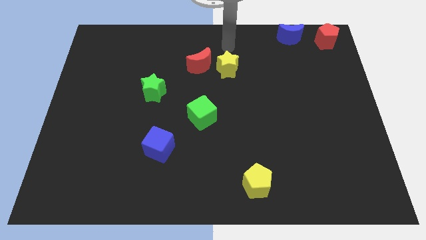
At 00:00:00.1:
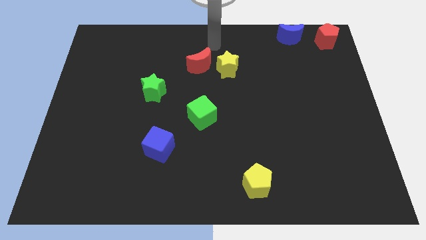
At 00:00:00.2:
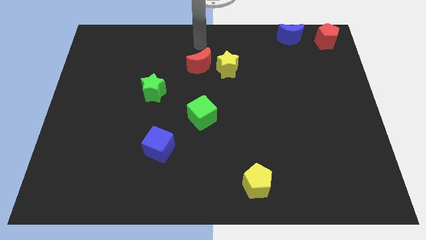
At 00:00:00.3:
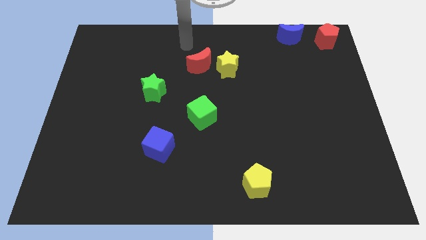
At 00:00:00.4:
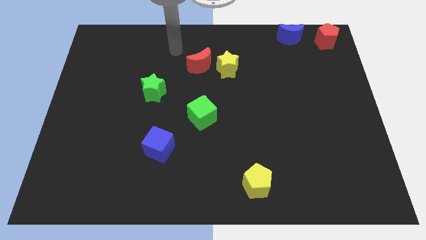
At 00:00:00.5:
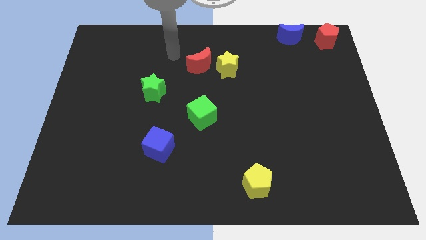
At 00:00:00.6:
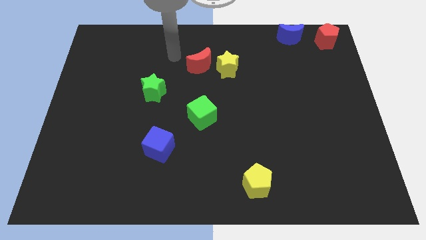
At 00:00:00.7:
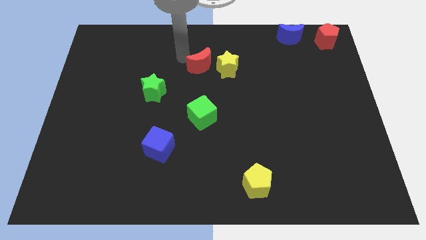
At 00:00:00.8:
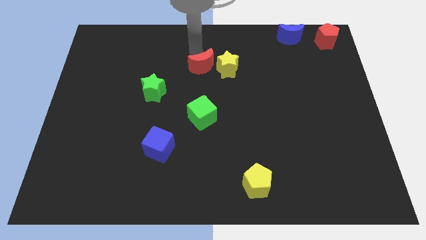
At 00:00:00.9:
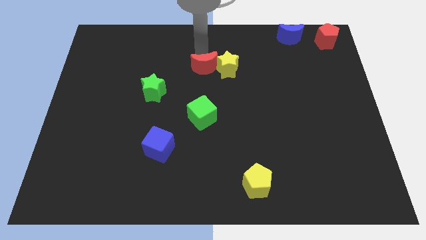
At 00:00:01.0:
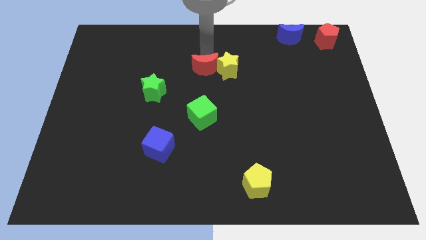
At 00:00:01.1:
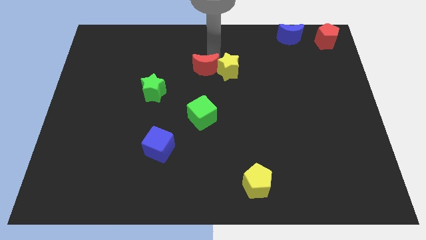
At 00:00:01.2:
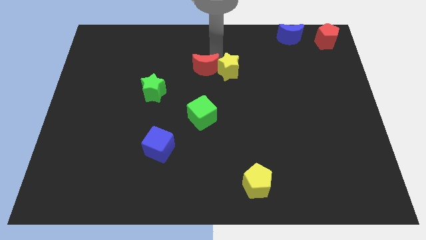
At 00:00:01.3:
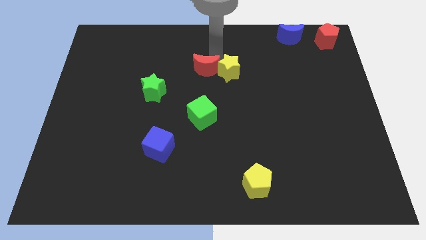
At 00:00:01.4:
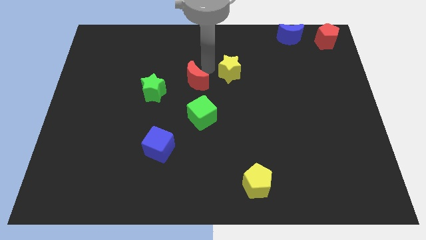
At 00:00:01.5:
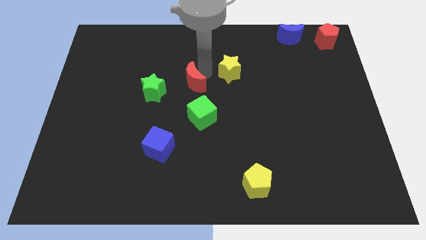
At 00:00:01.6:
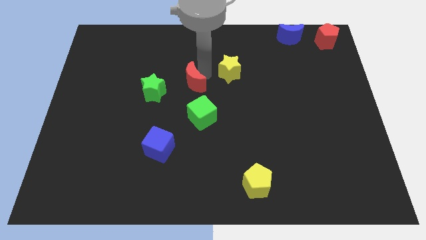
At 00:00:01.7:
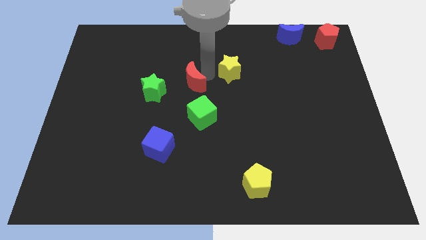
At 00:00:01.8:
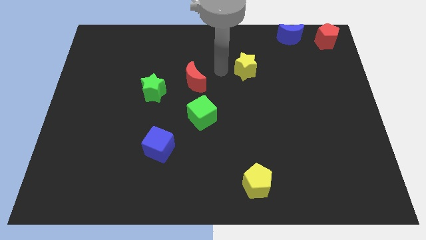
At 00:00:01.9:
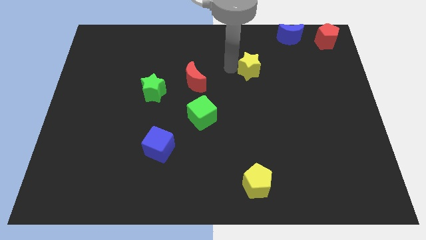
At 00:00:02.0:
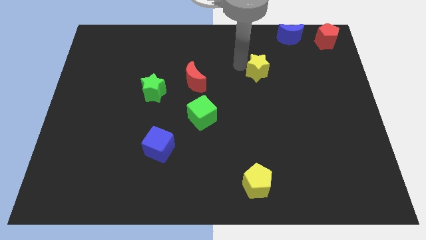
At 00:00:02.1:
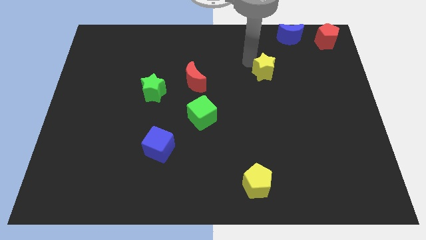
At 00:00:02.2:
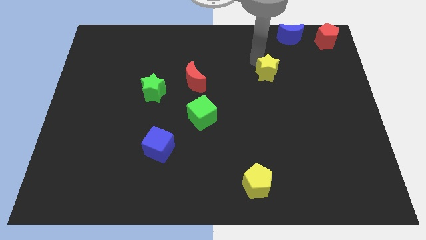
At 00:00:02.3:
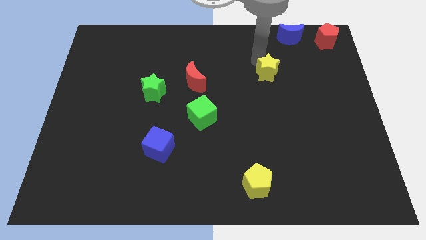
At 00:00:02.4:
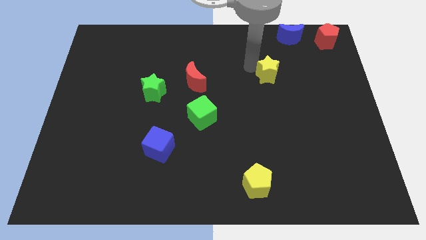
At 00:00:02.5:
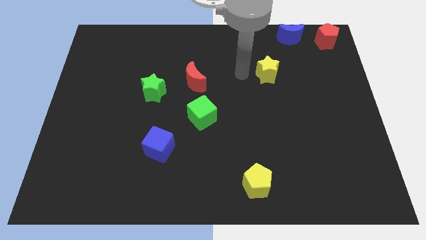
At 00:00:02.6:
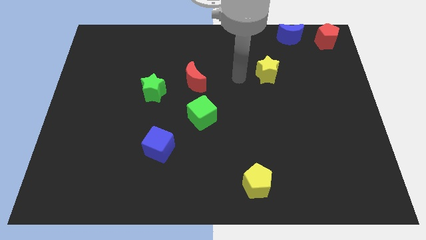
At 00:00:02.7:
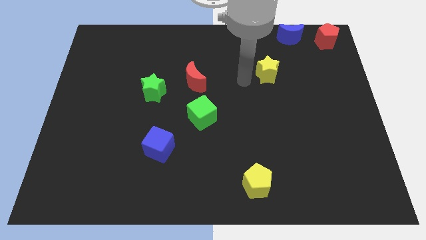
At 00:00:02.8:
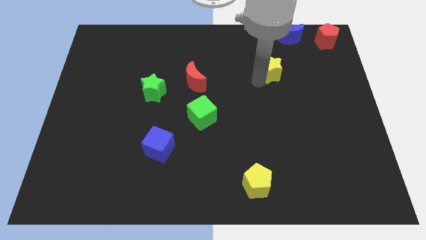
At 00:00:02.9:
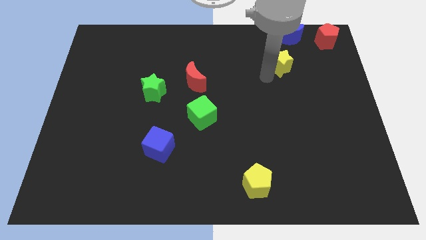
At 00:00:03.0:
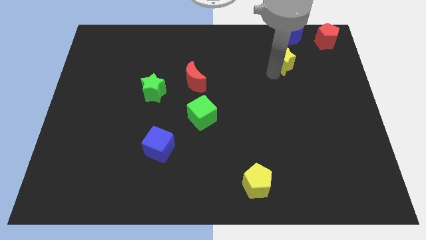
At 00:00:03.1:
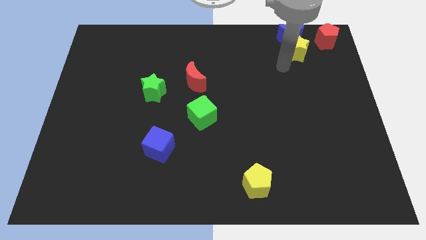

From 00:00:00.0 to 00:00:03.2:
push yellow star below blue crescent

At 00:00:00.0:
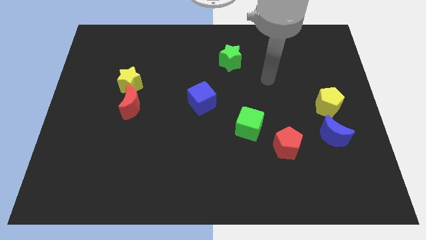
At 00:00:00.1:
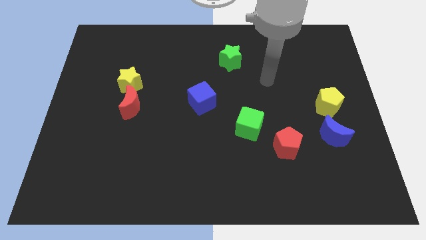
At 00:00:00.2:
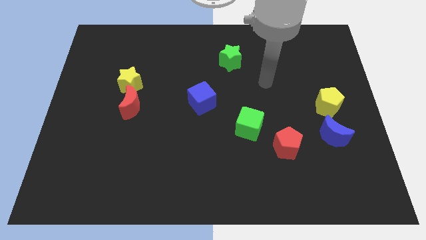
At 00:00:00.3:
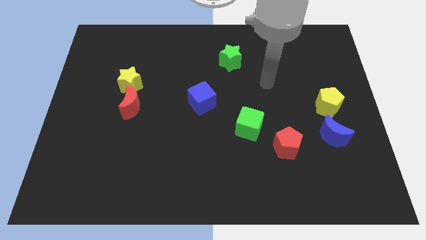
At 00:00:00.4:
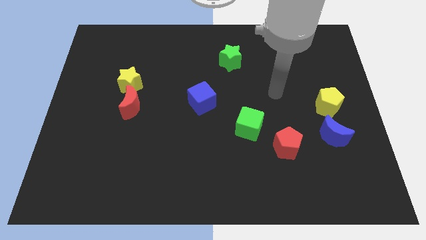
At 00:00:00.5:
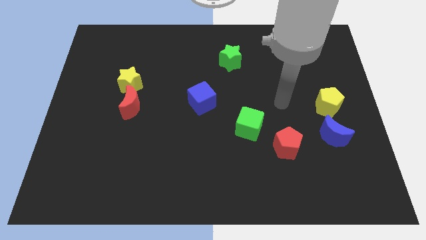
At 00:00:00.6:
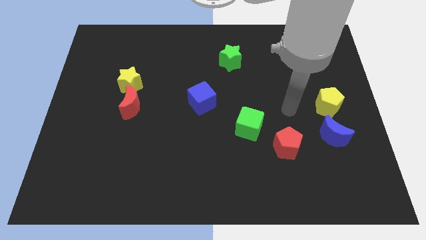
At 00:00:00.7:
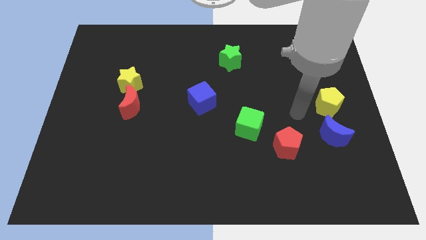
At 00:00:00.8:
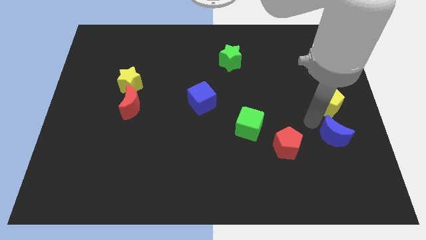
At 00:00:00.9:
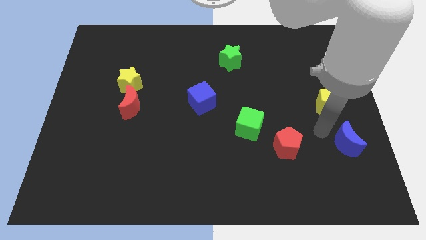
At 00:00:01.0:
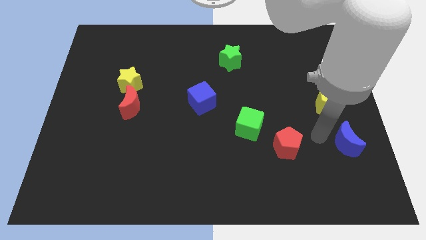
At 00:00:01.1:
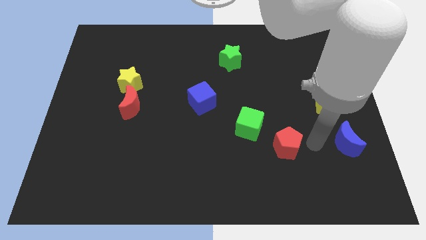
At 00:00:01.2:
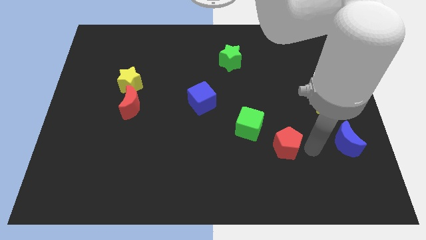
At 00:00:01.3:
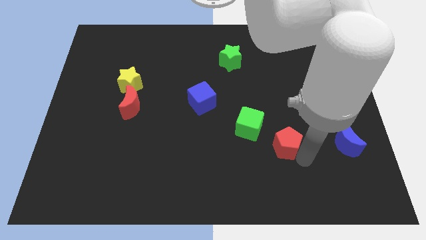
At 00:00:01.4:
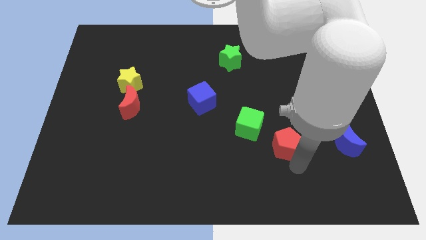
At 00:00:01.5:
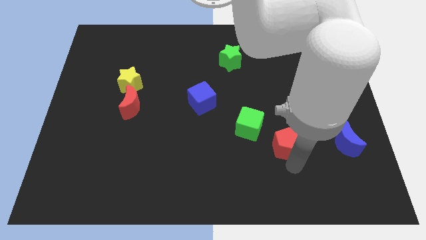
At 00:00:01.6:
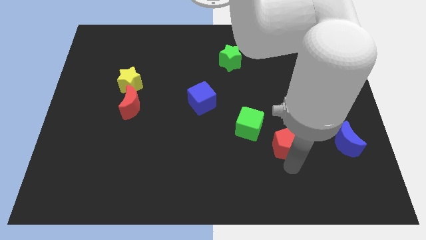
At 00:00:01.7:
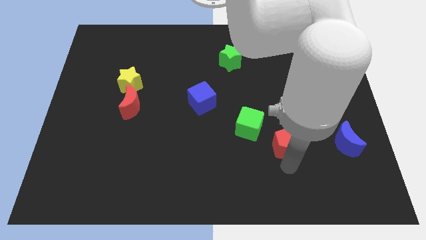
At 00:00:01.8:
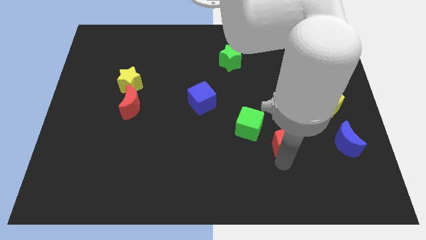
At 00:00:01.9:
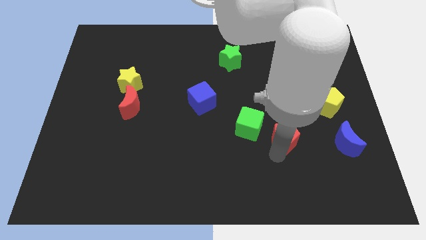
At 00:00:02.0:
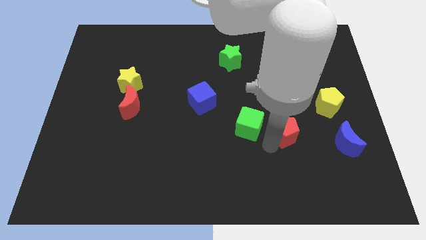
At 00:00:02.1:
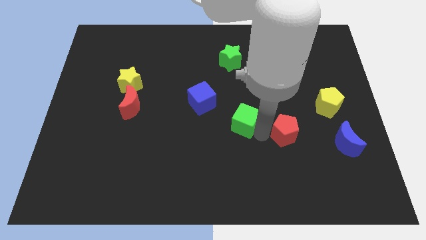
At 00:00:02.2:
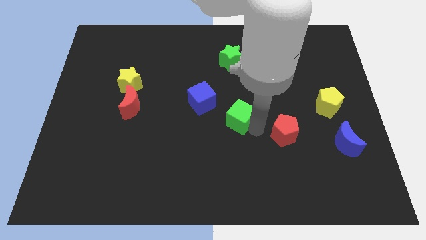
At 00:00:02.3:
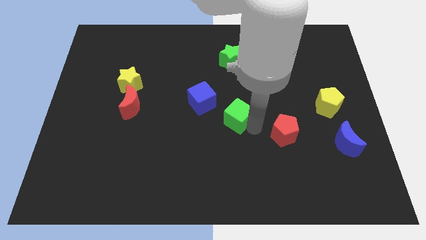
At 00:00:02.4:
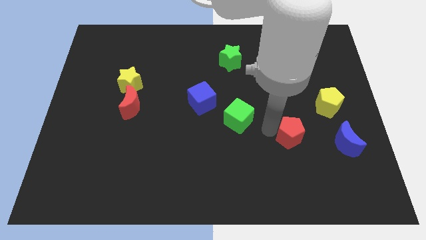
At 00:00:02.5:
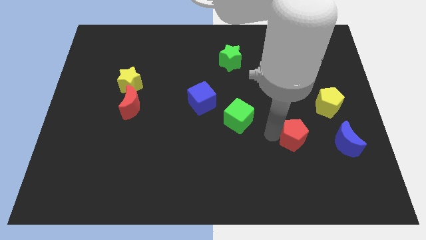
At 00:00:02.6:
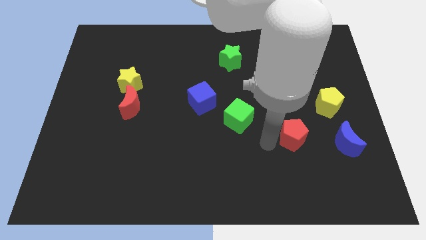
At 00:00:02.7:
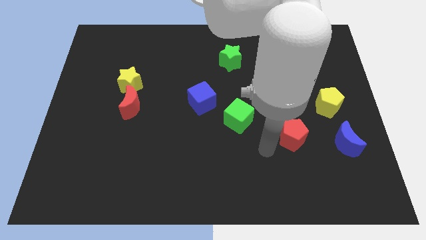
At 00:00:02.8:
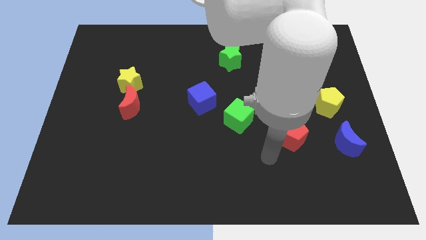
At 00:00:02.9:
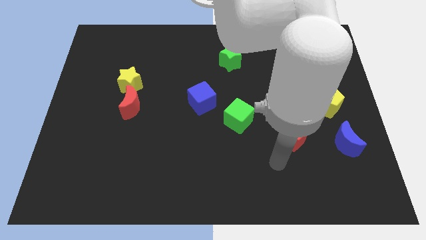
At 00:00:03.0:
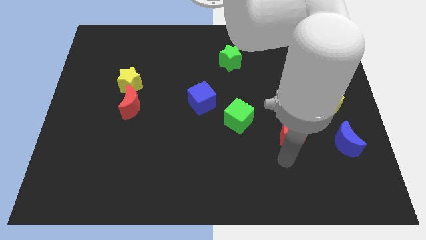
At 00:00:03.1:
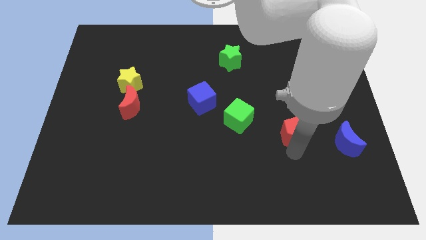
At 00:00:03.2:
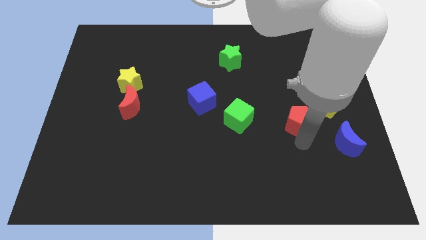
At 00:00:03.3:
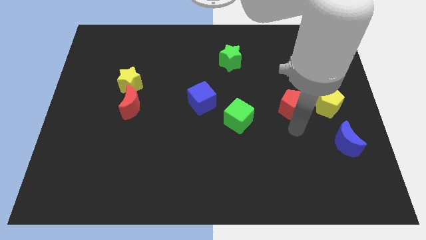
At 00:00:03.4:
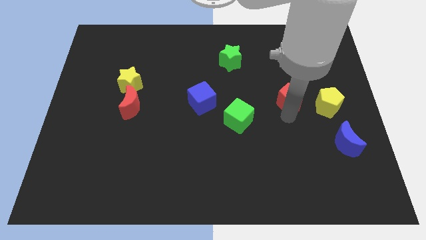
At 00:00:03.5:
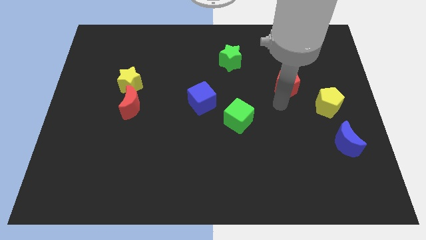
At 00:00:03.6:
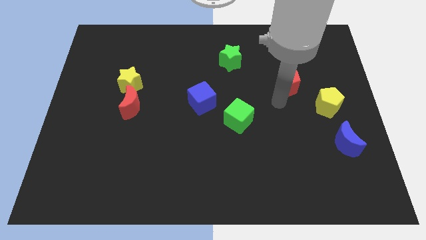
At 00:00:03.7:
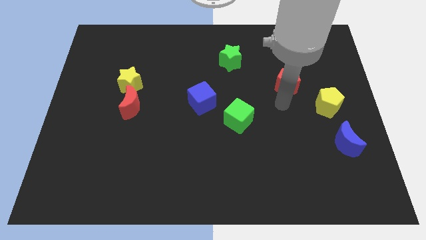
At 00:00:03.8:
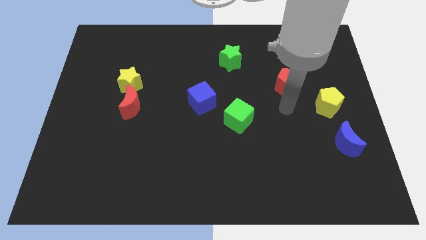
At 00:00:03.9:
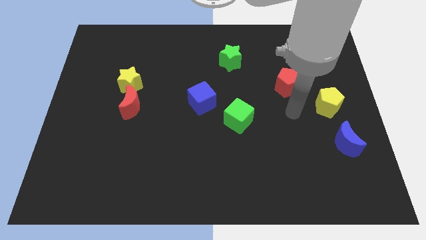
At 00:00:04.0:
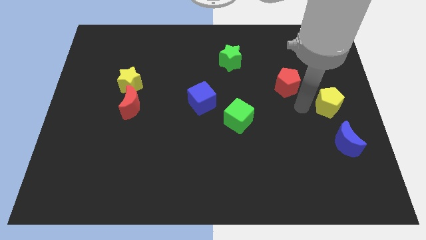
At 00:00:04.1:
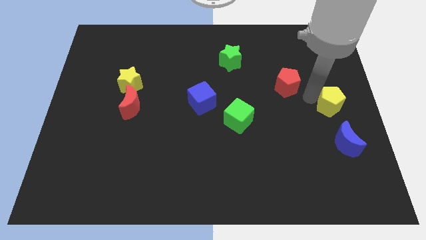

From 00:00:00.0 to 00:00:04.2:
go and place the red pentagon in between the green star and the yellow pentagon

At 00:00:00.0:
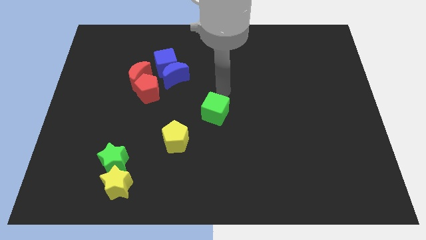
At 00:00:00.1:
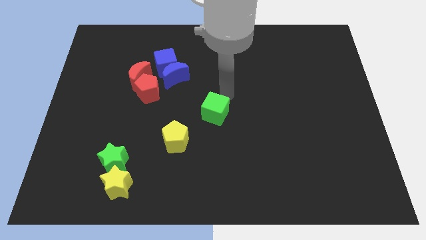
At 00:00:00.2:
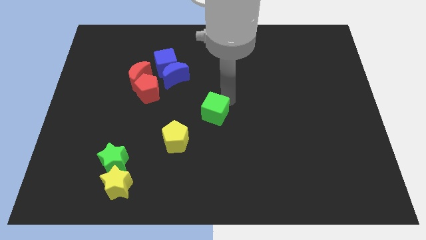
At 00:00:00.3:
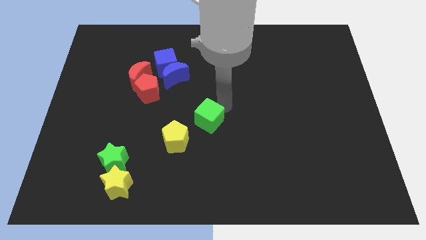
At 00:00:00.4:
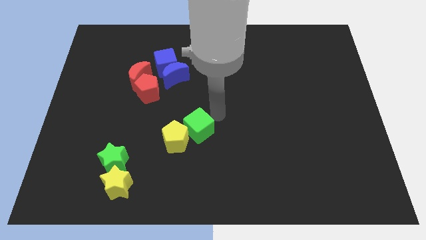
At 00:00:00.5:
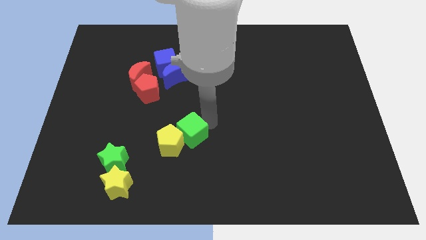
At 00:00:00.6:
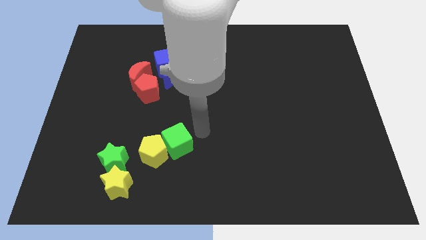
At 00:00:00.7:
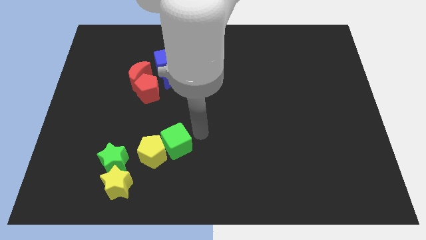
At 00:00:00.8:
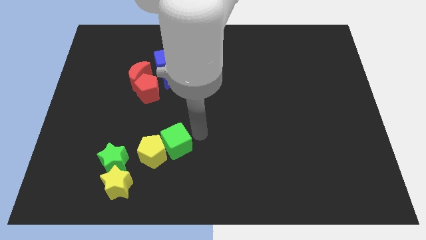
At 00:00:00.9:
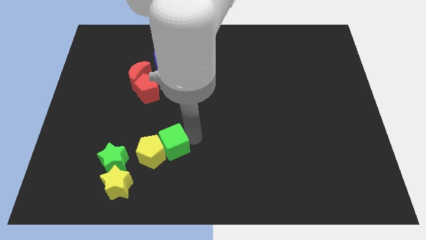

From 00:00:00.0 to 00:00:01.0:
push the green cube into the yellow pentagon

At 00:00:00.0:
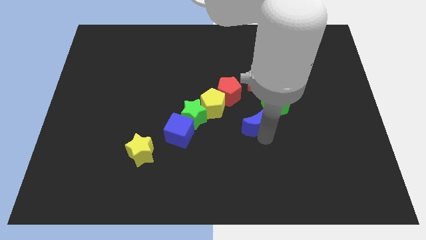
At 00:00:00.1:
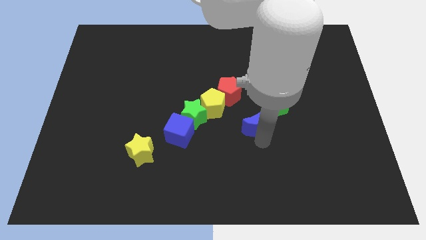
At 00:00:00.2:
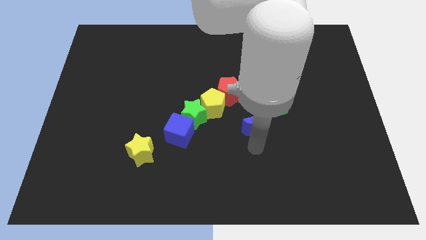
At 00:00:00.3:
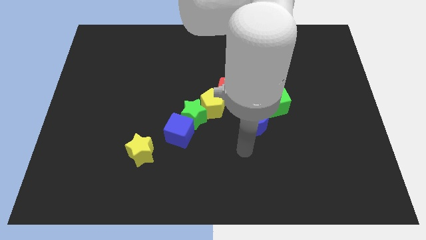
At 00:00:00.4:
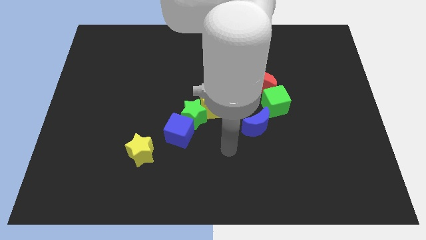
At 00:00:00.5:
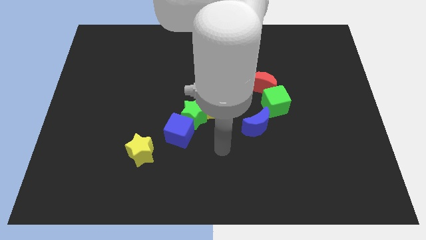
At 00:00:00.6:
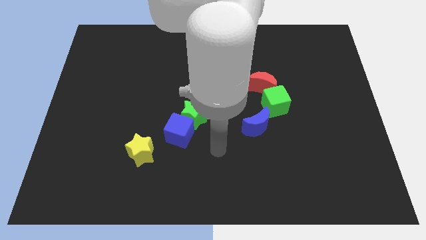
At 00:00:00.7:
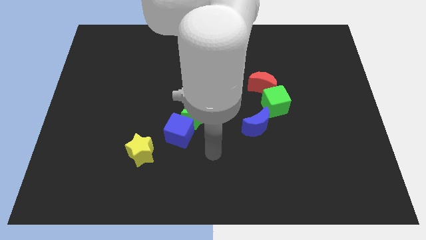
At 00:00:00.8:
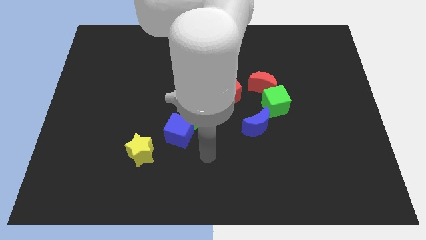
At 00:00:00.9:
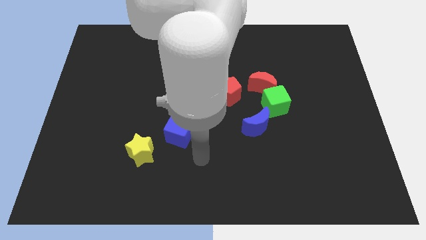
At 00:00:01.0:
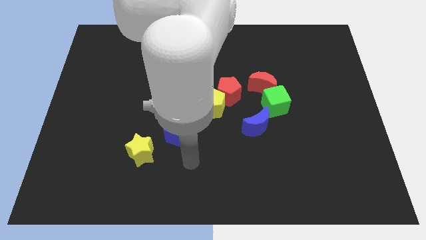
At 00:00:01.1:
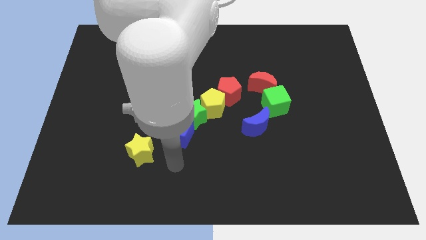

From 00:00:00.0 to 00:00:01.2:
move the arm below the blue cube
